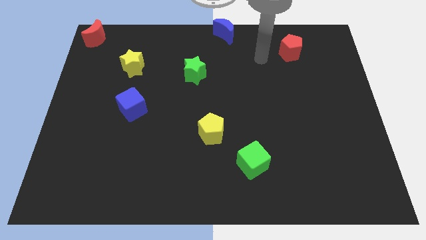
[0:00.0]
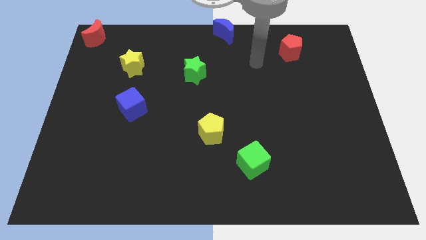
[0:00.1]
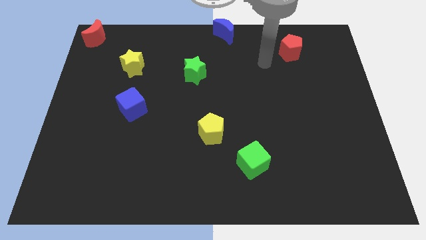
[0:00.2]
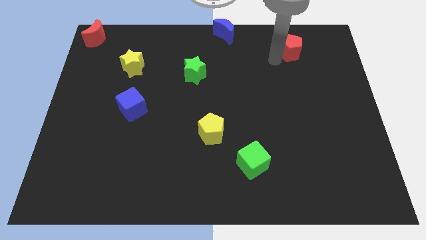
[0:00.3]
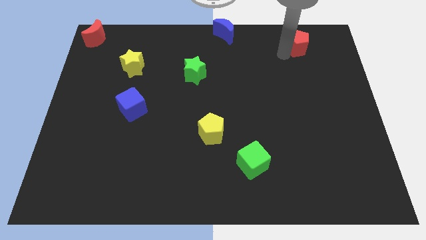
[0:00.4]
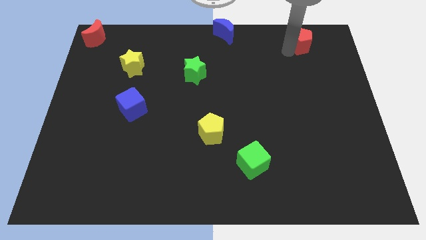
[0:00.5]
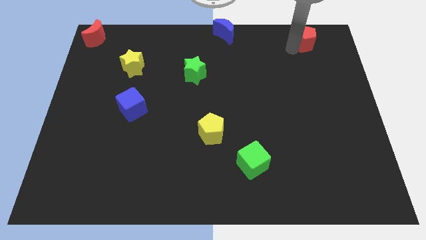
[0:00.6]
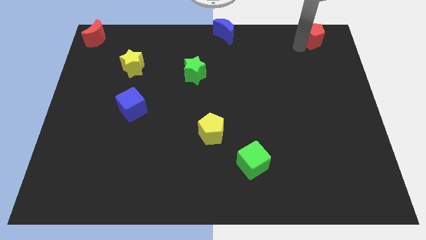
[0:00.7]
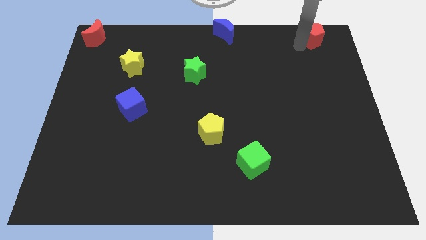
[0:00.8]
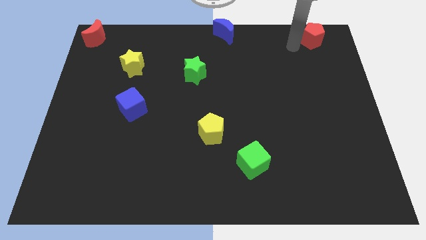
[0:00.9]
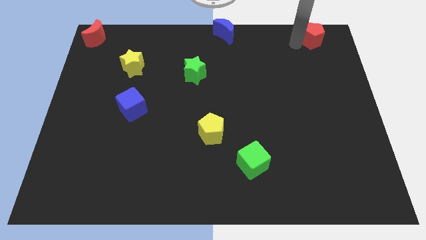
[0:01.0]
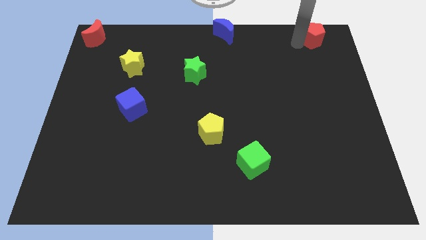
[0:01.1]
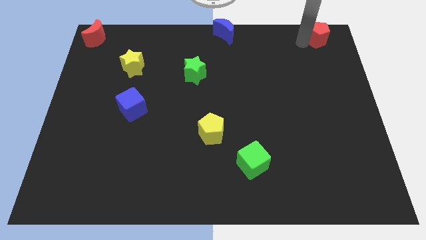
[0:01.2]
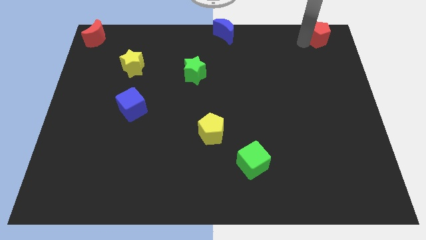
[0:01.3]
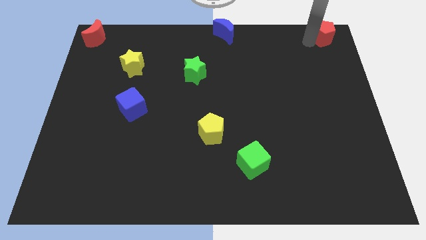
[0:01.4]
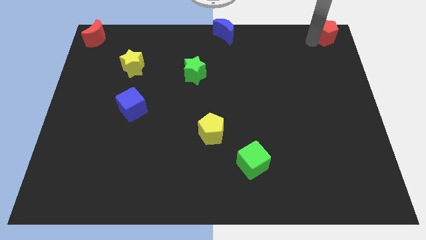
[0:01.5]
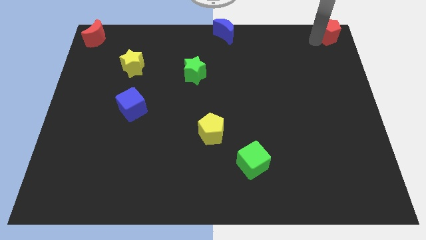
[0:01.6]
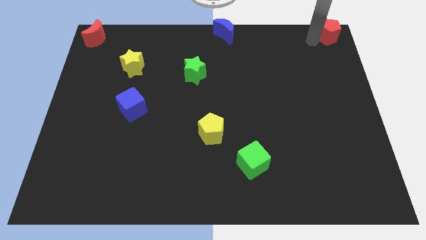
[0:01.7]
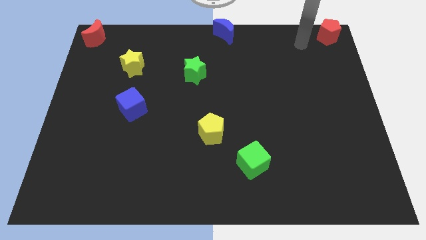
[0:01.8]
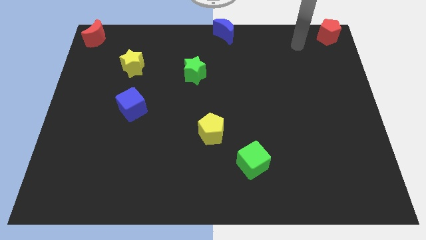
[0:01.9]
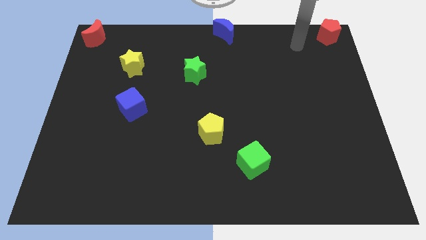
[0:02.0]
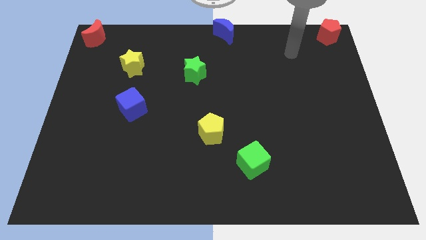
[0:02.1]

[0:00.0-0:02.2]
move the red pentagon to the top right corner of the board

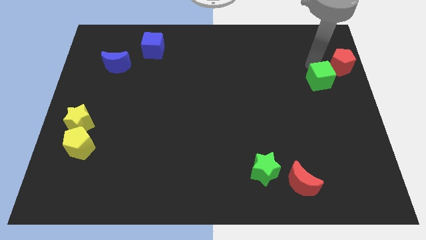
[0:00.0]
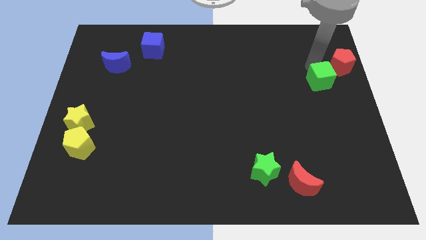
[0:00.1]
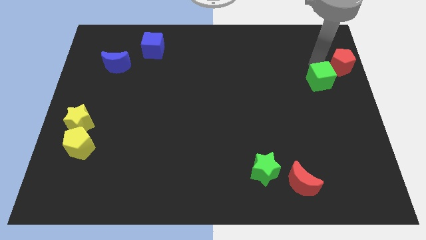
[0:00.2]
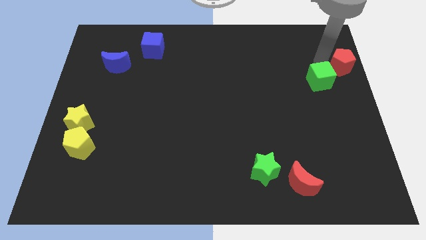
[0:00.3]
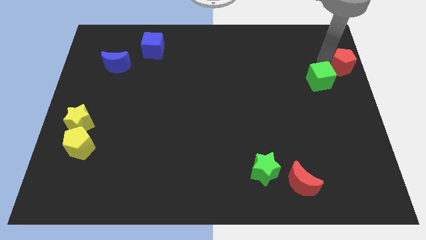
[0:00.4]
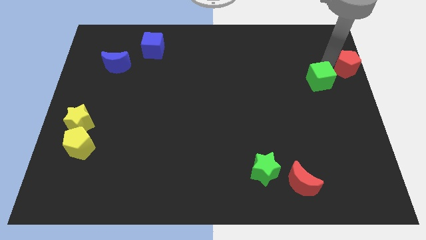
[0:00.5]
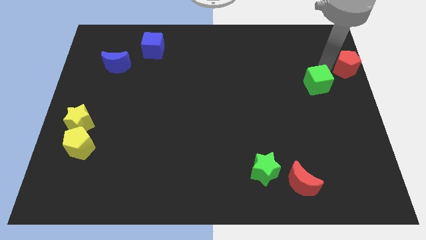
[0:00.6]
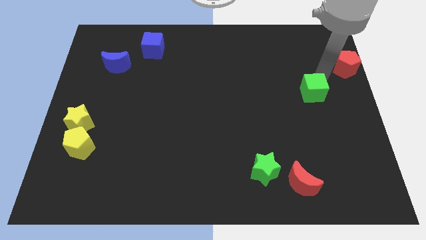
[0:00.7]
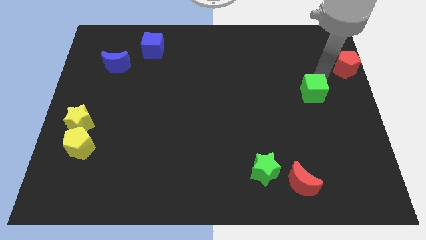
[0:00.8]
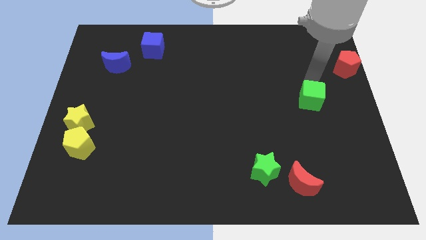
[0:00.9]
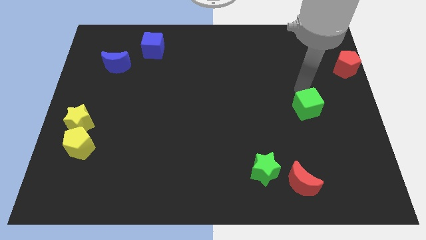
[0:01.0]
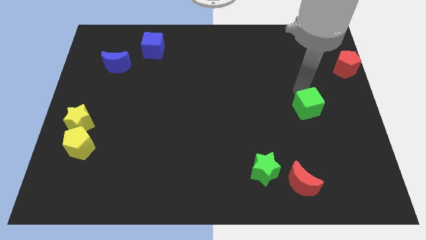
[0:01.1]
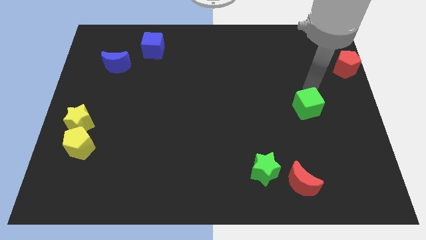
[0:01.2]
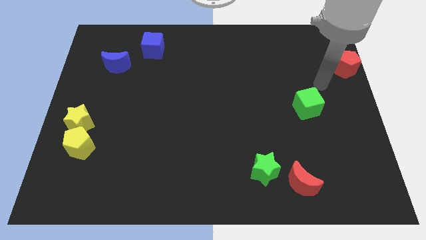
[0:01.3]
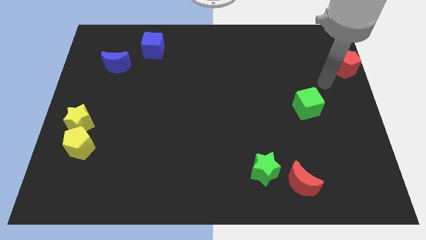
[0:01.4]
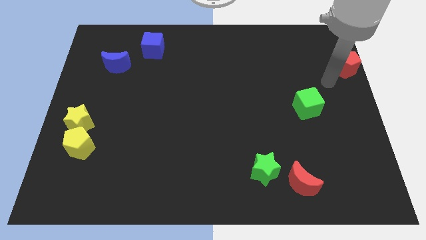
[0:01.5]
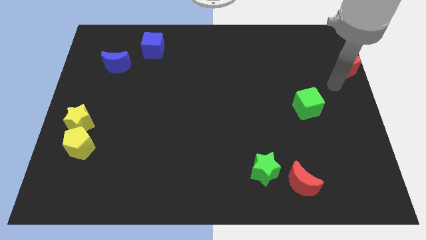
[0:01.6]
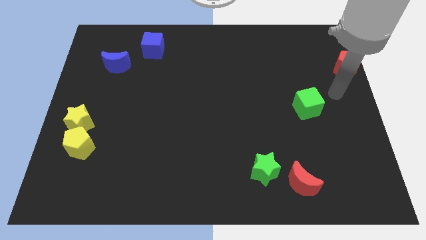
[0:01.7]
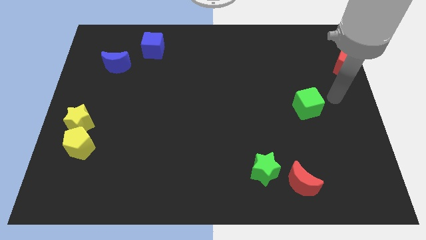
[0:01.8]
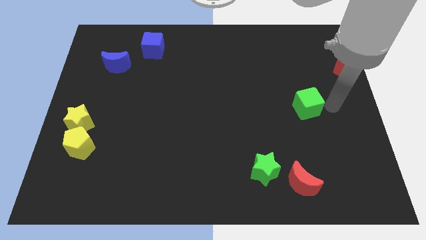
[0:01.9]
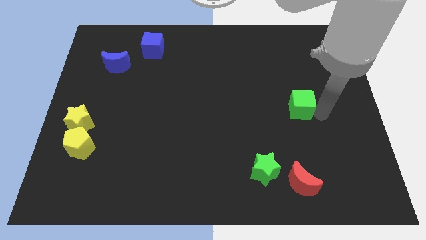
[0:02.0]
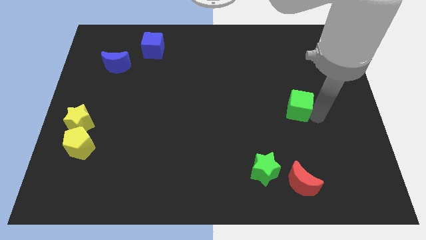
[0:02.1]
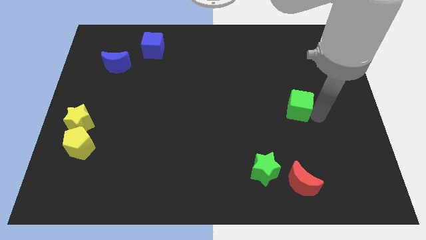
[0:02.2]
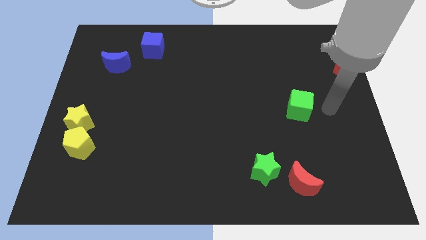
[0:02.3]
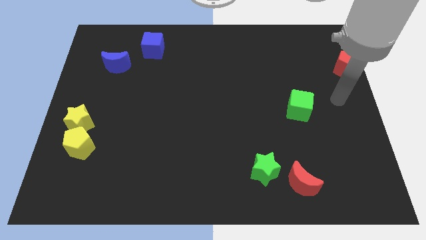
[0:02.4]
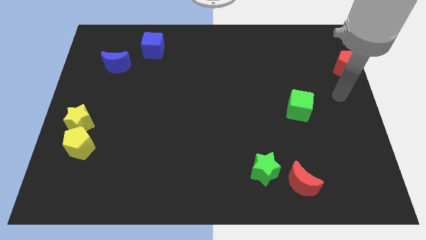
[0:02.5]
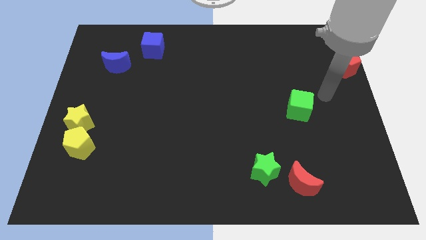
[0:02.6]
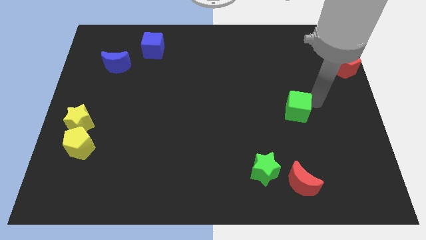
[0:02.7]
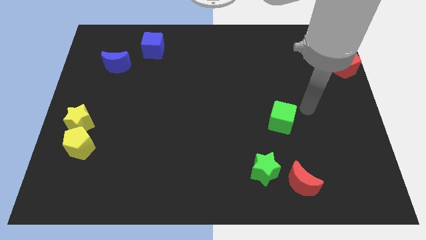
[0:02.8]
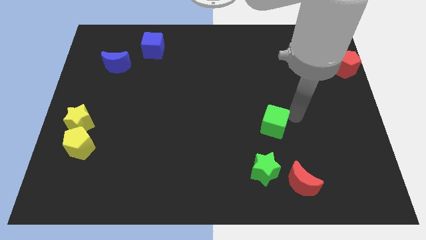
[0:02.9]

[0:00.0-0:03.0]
move the green cube diagonal above the green star

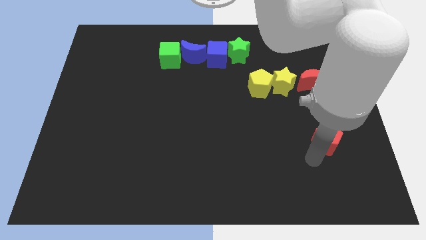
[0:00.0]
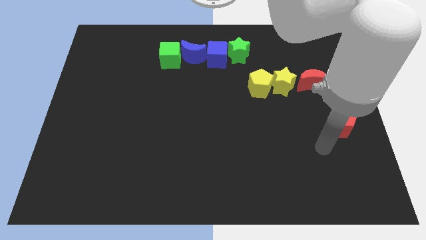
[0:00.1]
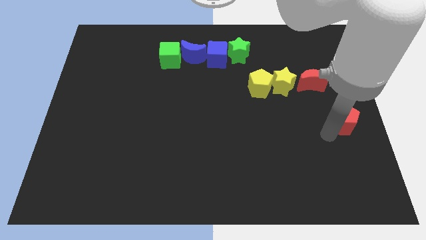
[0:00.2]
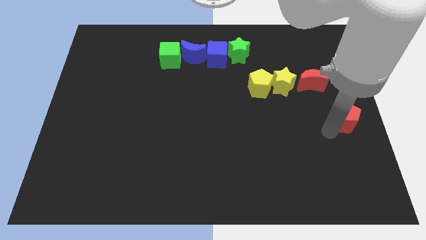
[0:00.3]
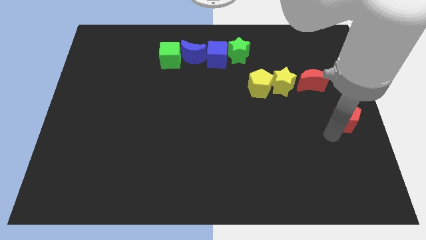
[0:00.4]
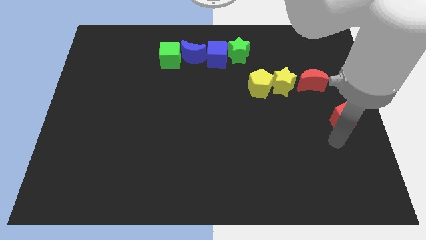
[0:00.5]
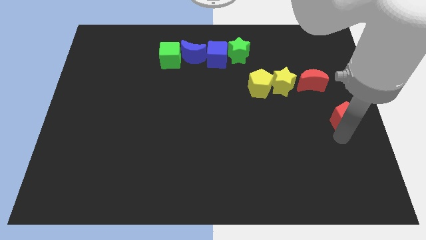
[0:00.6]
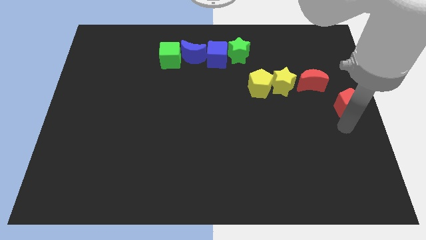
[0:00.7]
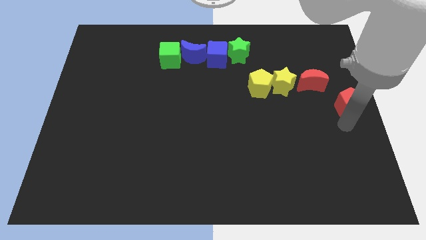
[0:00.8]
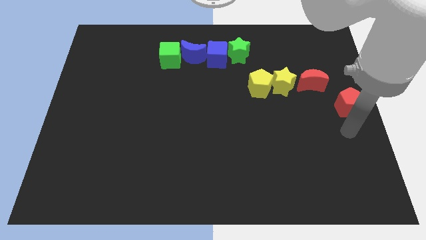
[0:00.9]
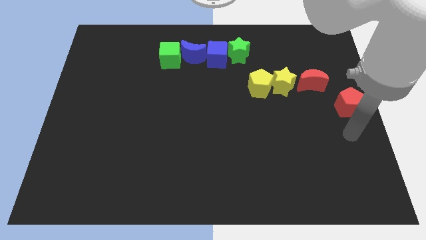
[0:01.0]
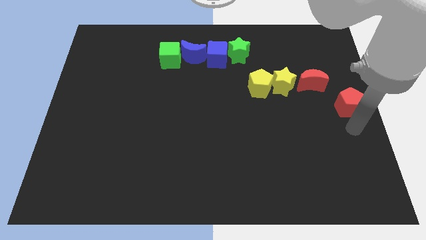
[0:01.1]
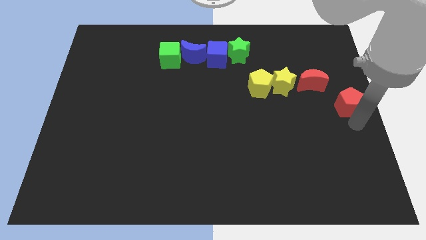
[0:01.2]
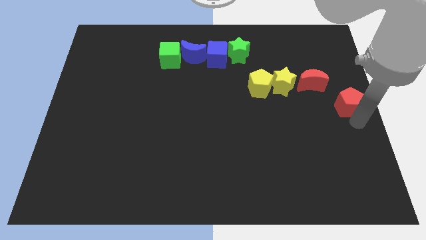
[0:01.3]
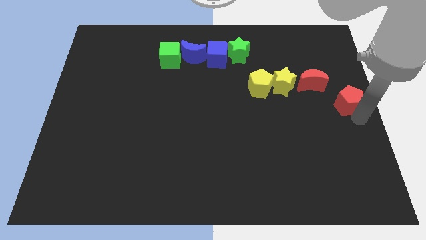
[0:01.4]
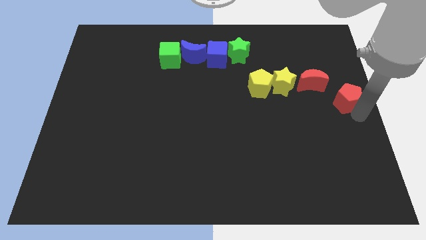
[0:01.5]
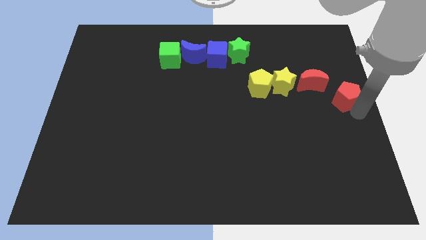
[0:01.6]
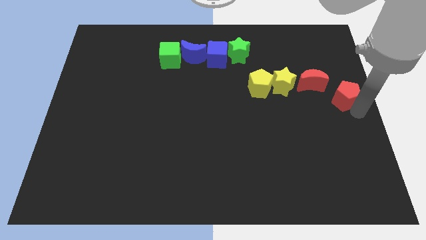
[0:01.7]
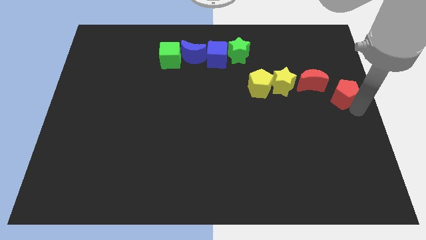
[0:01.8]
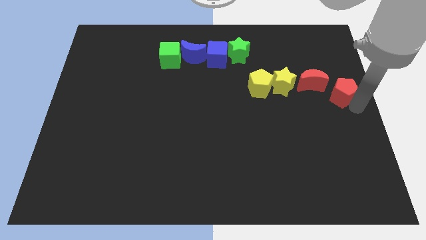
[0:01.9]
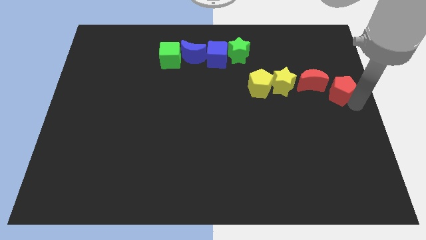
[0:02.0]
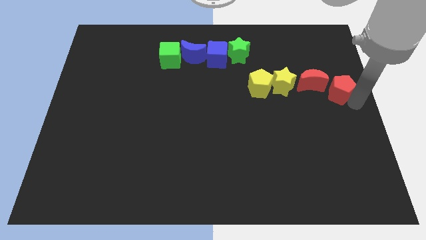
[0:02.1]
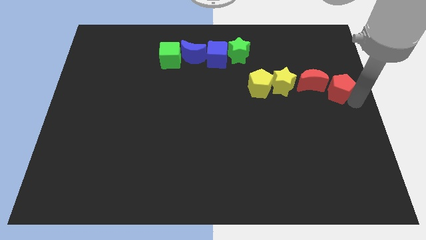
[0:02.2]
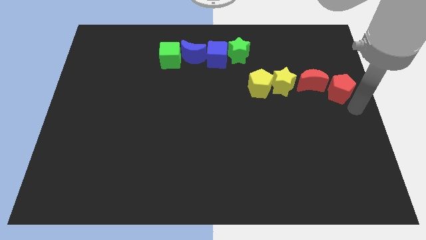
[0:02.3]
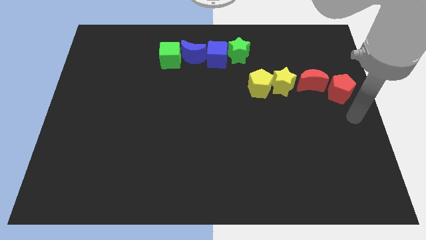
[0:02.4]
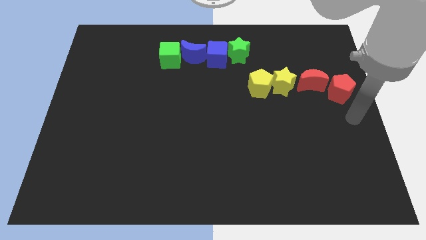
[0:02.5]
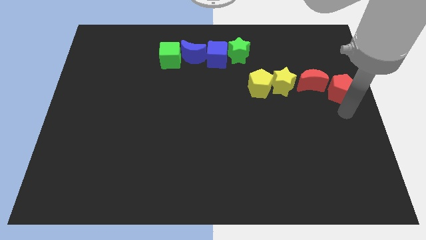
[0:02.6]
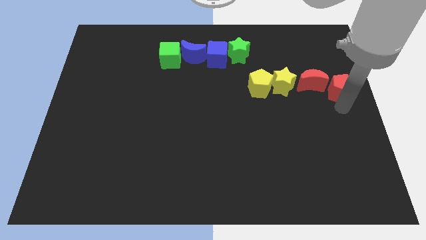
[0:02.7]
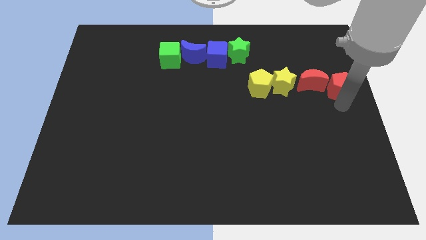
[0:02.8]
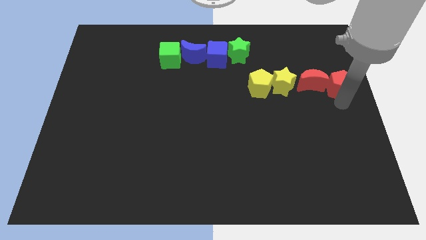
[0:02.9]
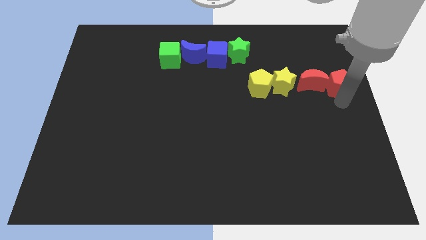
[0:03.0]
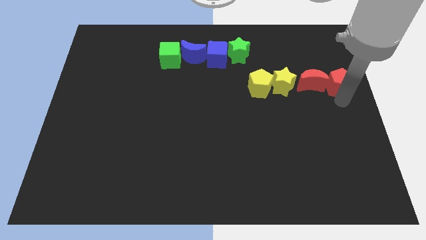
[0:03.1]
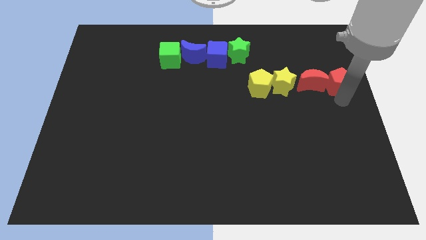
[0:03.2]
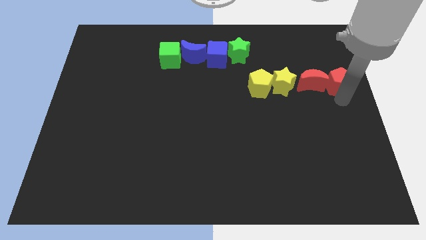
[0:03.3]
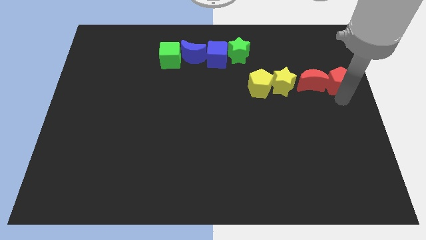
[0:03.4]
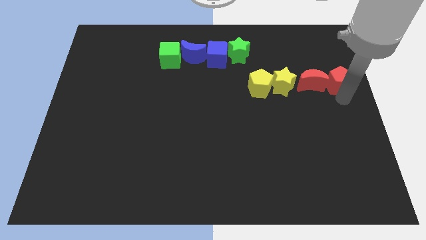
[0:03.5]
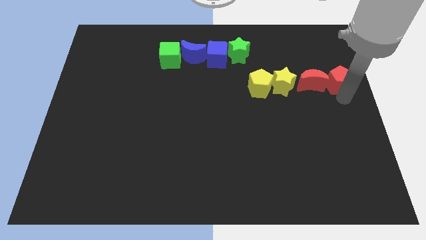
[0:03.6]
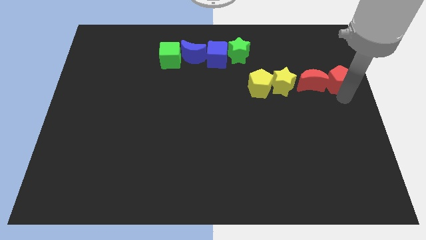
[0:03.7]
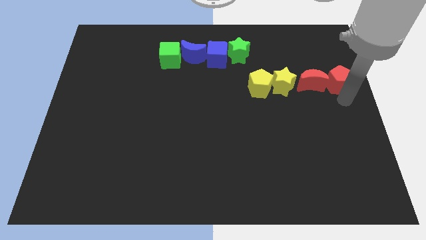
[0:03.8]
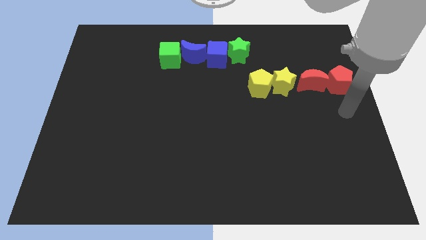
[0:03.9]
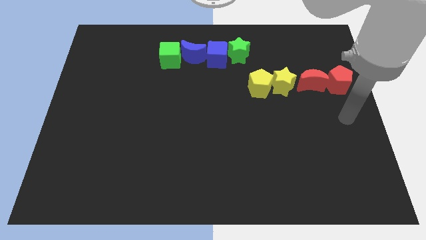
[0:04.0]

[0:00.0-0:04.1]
place the red pentagon to the right side of the red crescent
